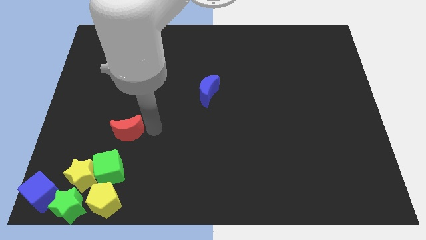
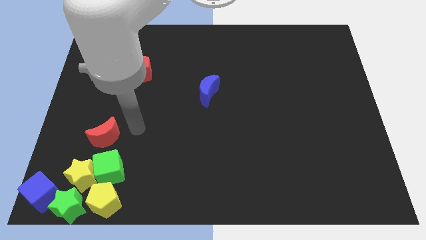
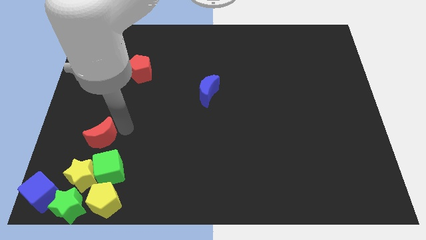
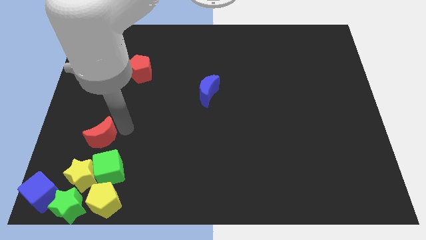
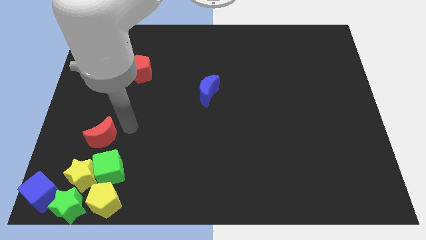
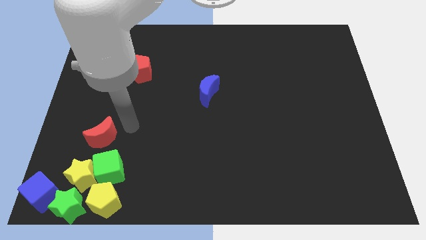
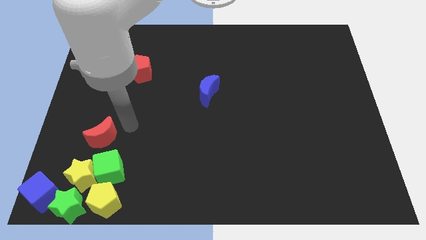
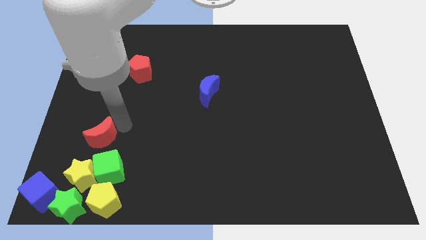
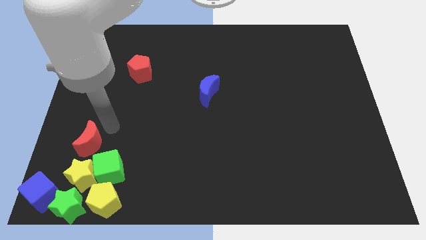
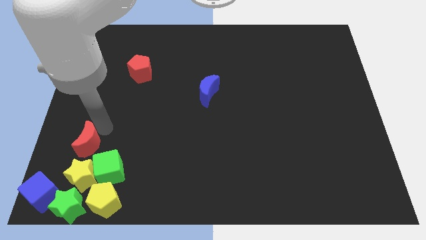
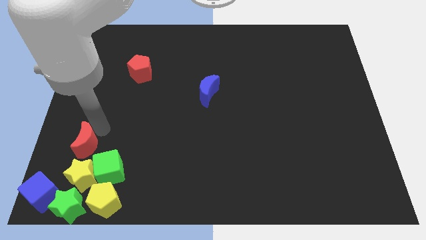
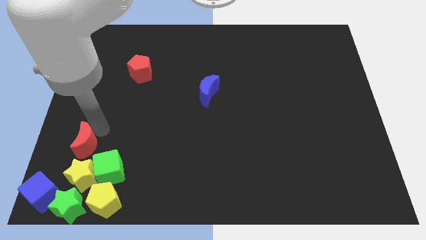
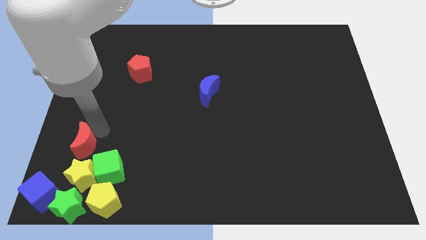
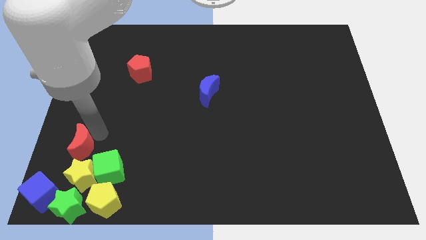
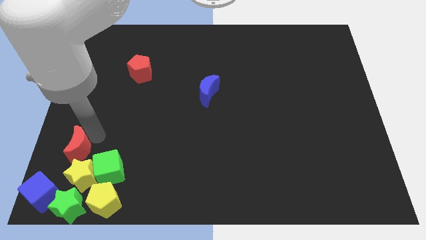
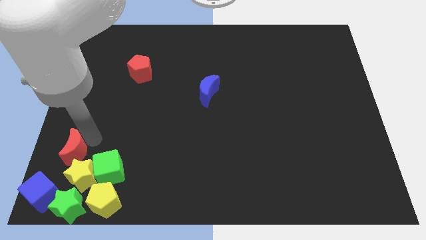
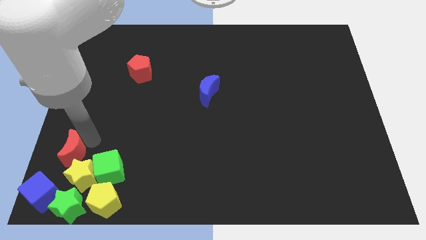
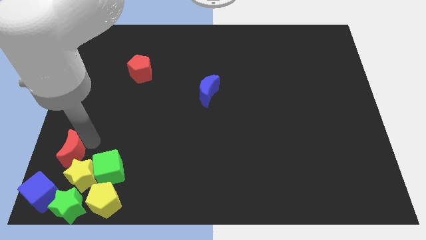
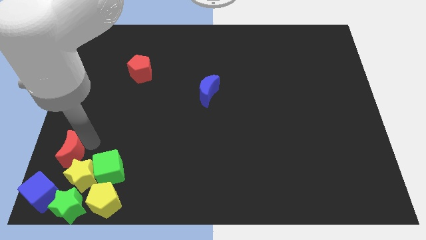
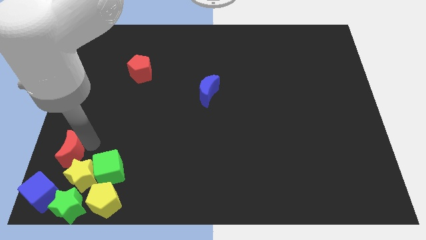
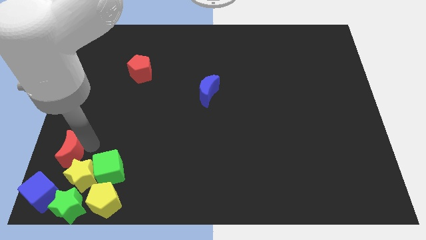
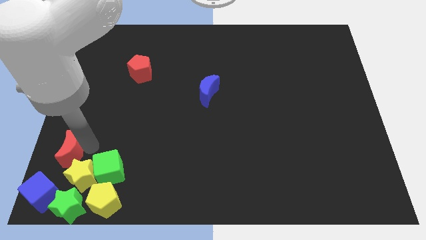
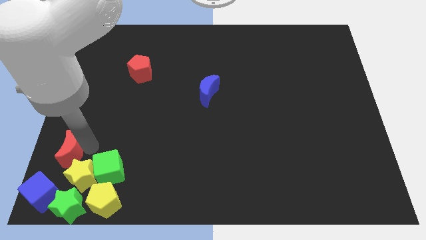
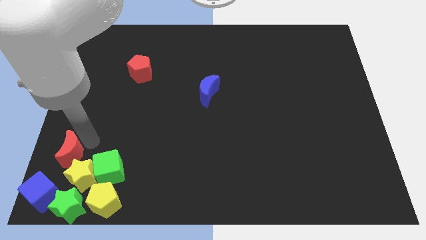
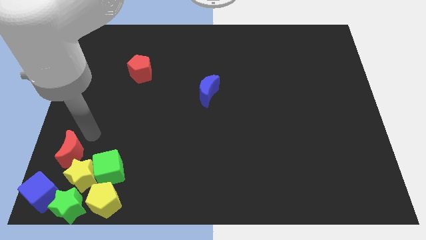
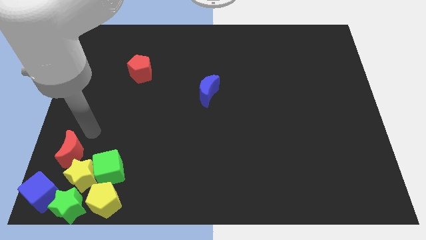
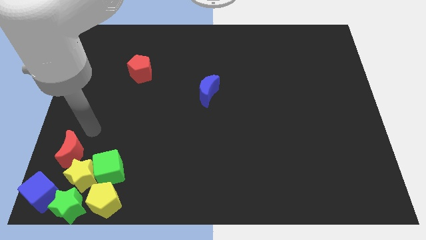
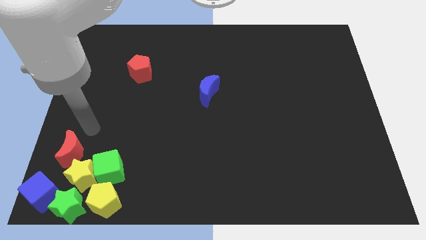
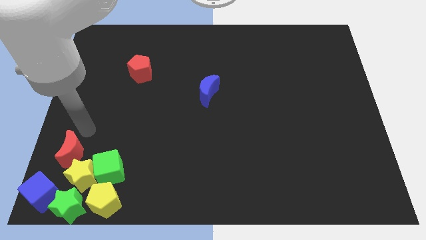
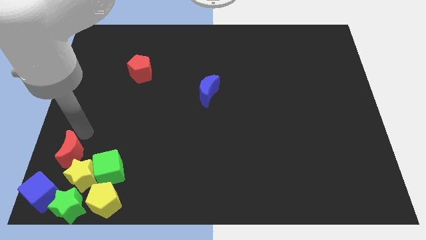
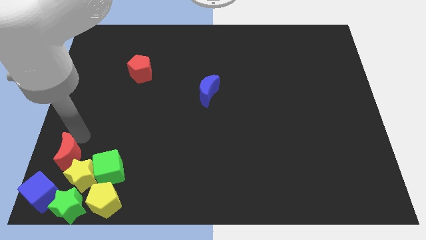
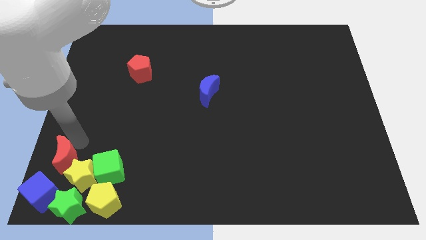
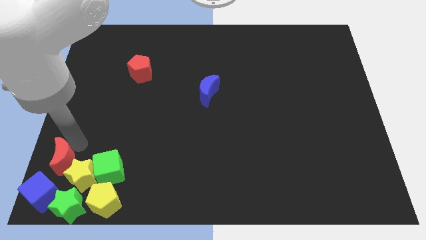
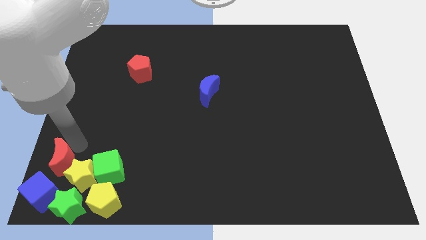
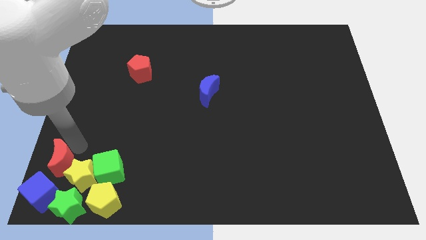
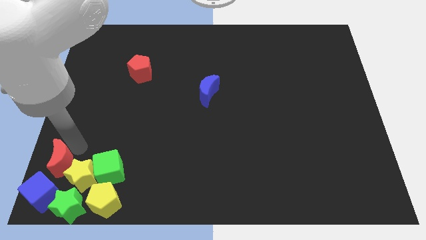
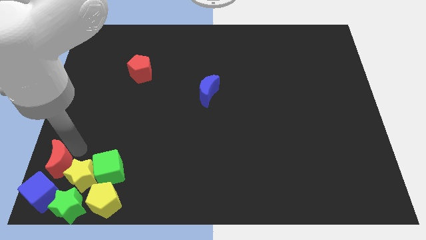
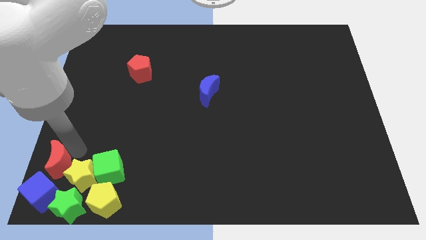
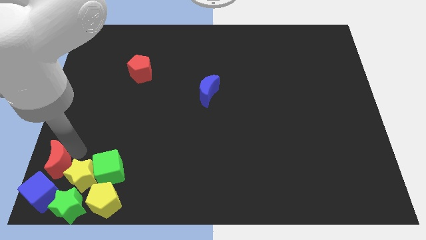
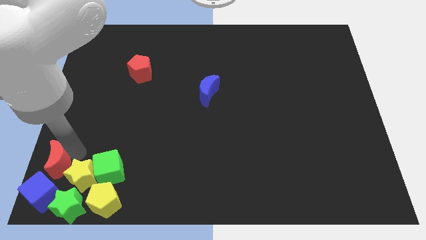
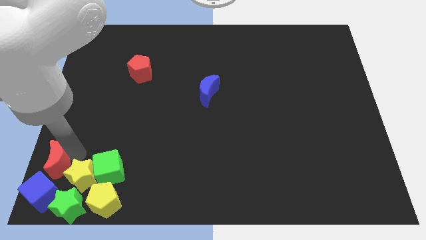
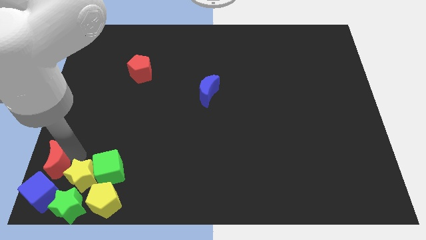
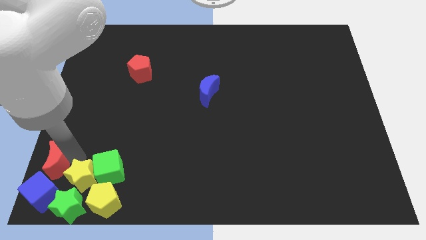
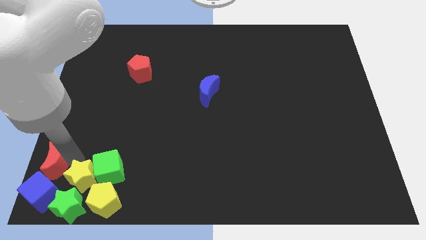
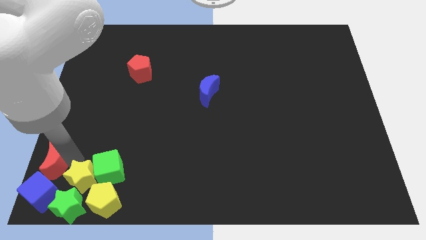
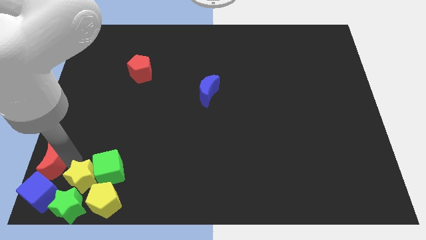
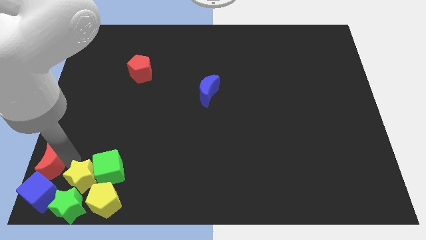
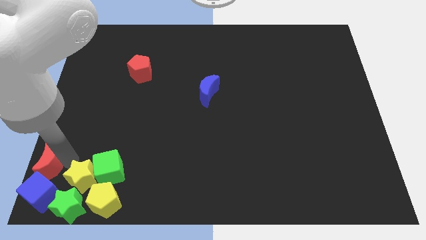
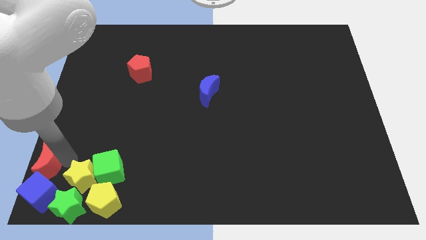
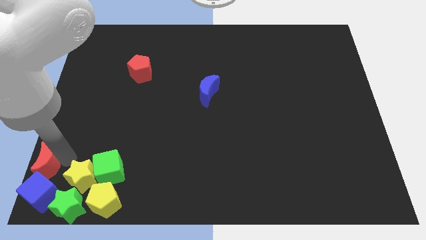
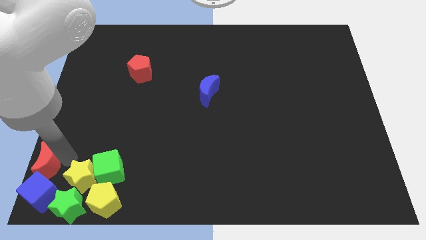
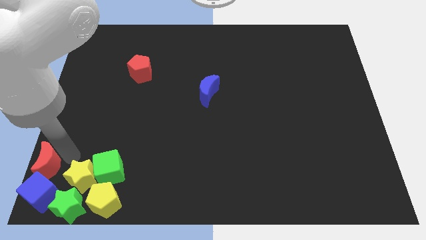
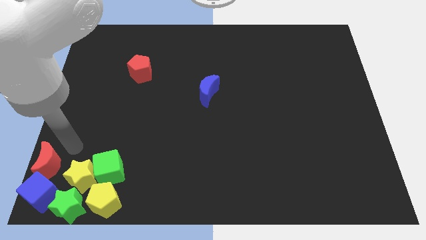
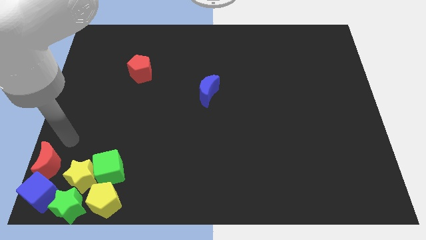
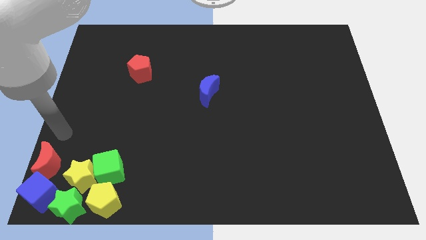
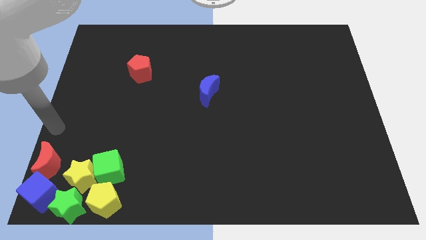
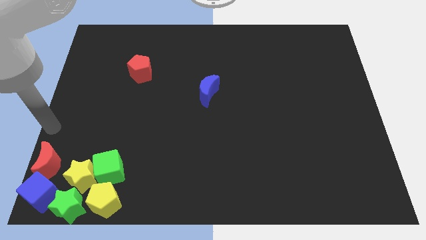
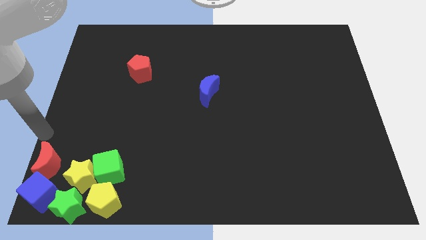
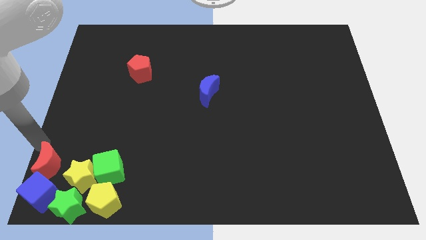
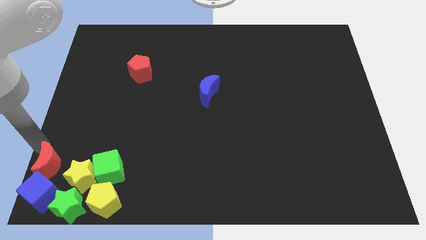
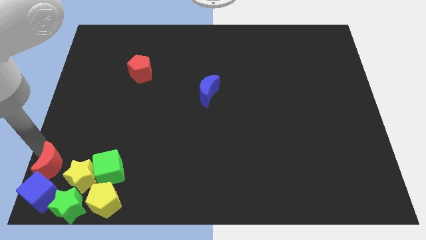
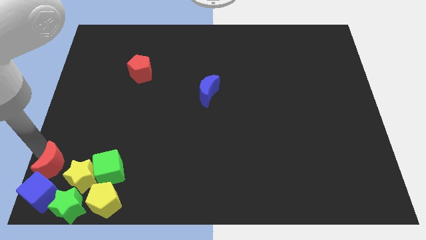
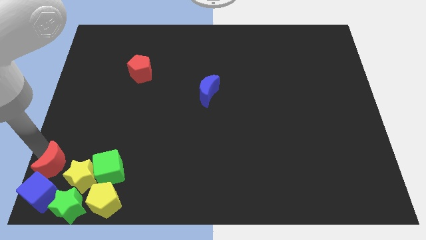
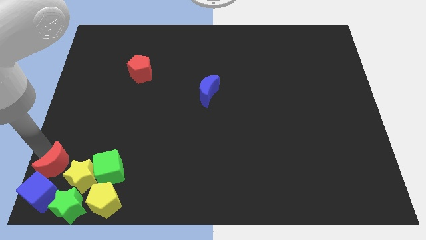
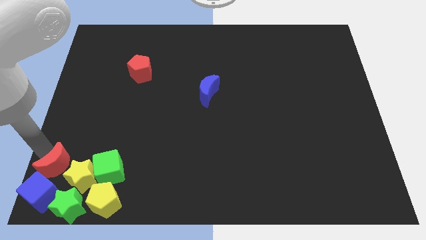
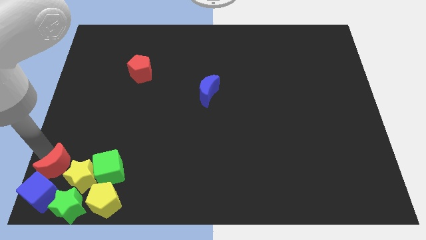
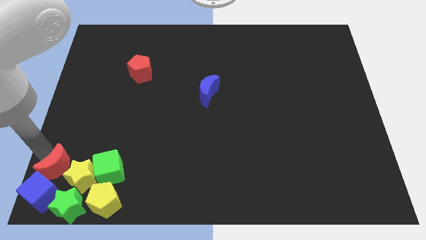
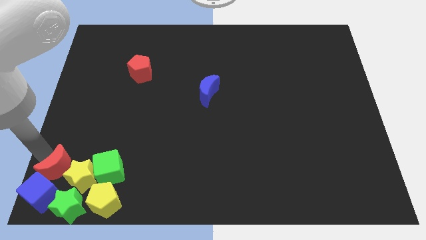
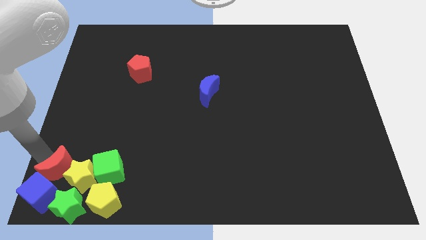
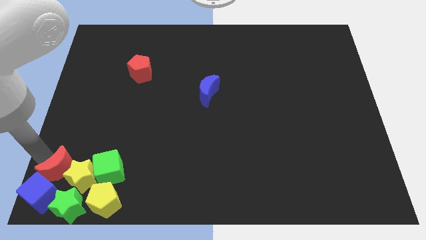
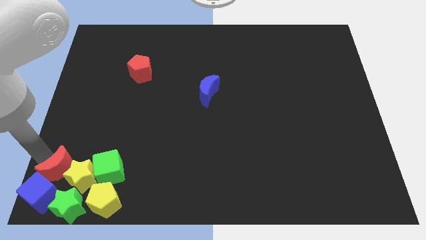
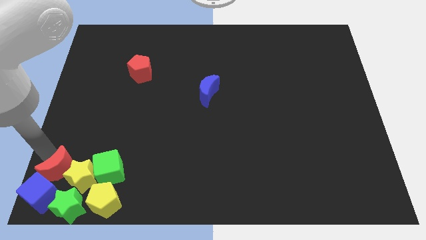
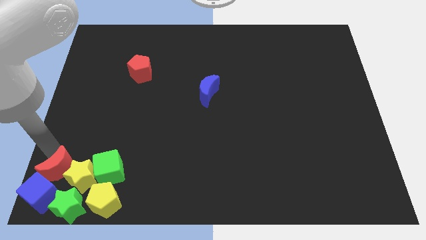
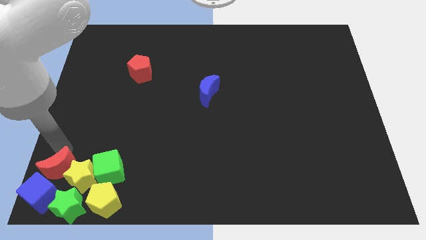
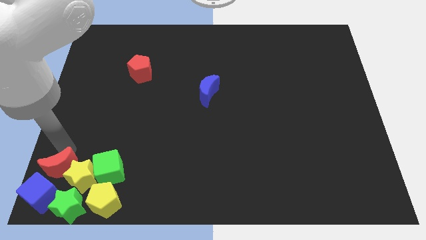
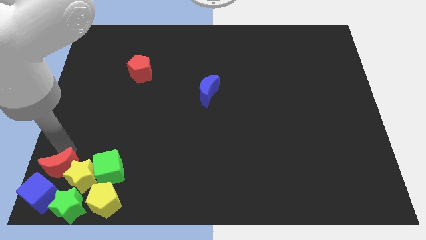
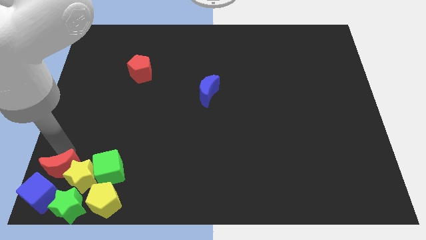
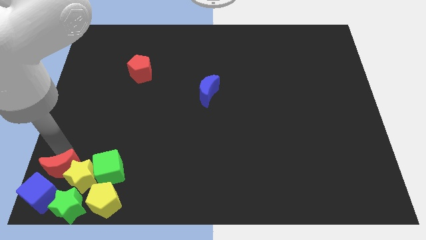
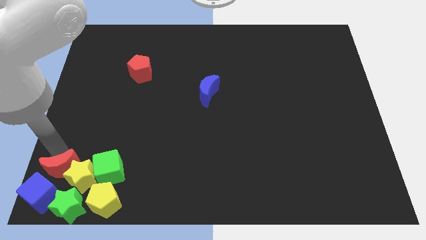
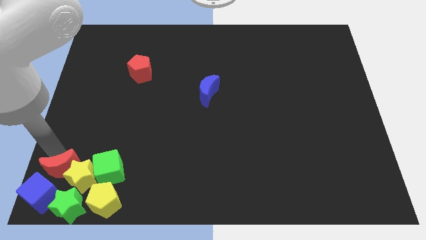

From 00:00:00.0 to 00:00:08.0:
move the red crescent into the group of blocks

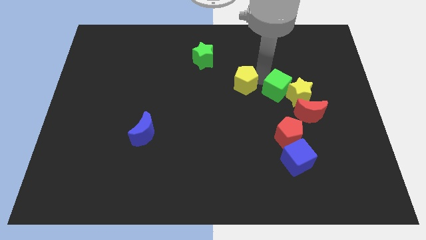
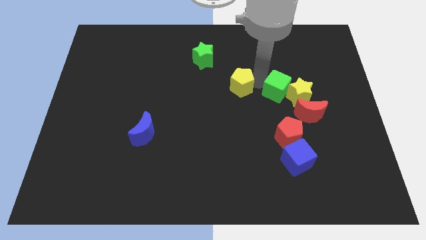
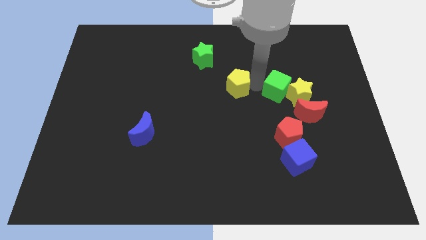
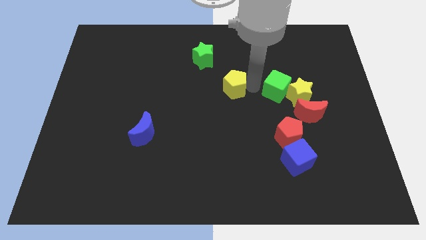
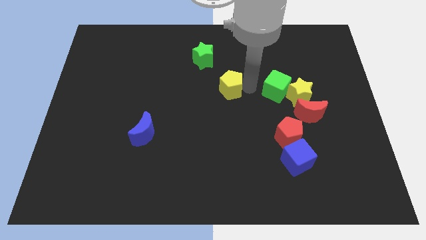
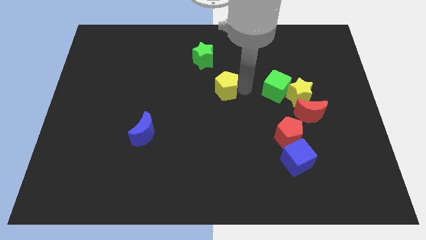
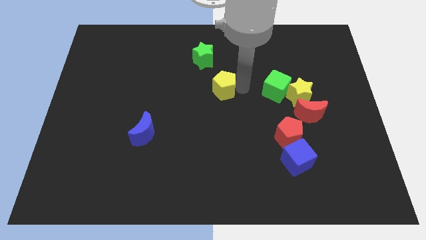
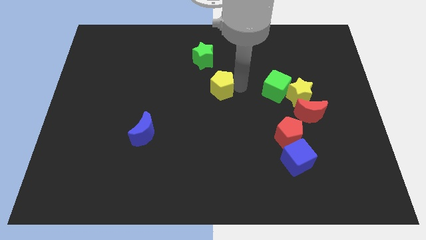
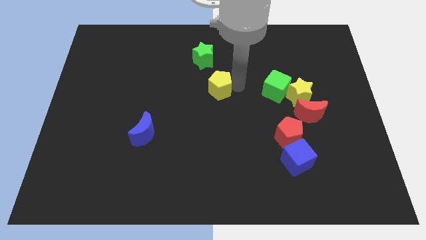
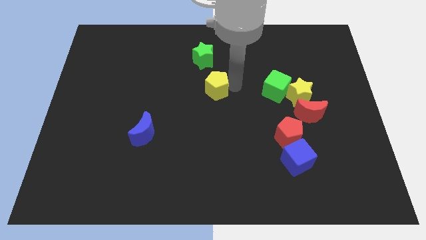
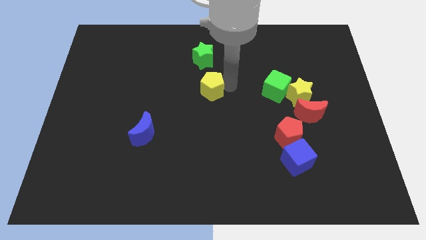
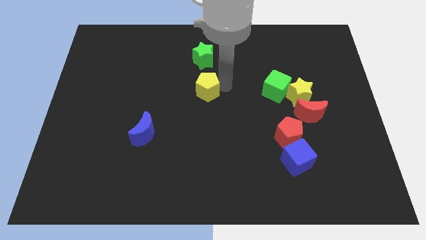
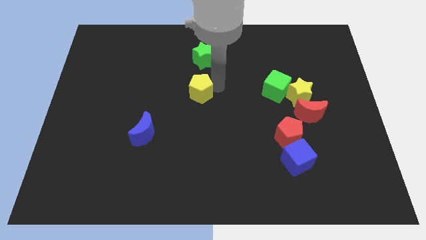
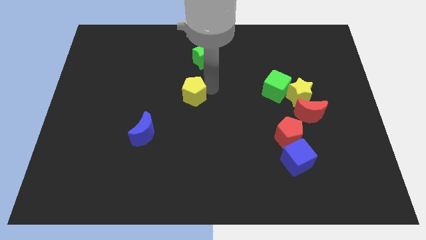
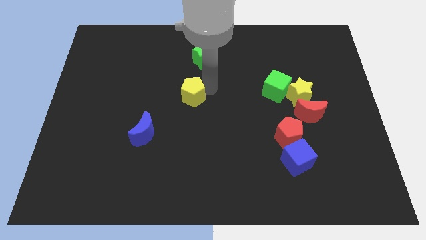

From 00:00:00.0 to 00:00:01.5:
push the yellow pentagon to the bottom of the green star
